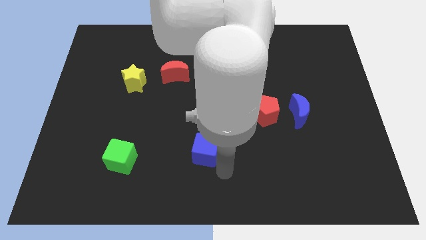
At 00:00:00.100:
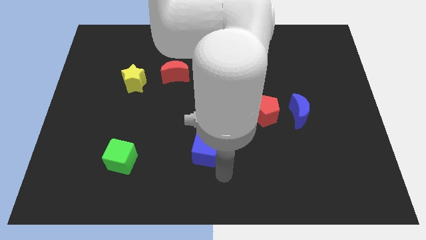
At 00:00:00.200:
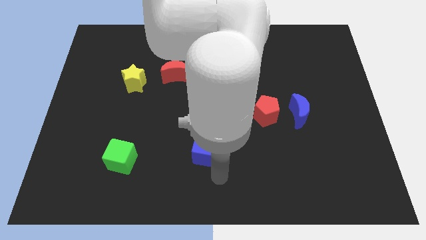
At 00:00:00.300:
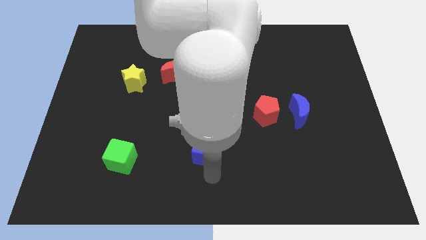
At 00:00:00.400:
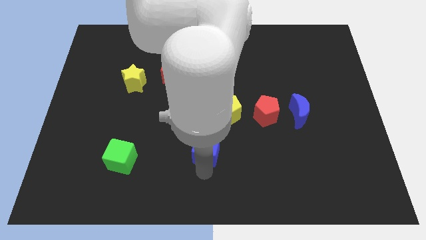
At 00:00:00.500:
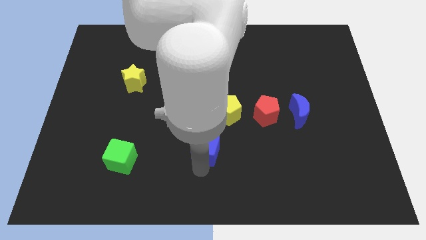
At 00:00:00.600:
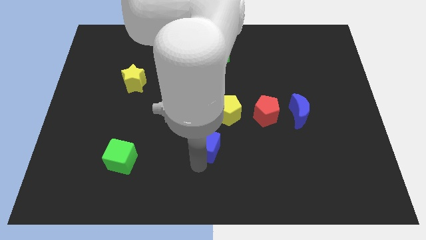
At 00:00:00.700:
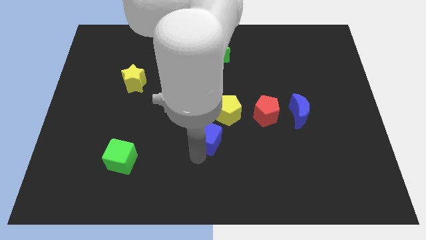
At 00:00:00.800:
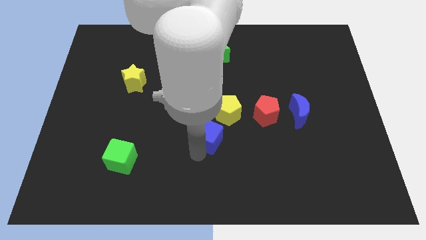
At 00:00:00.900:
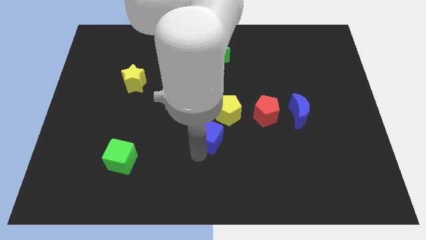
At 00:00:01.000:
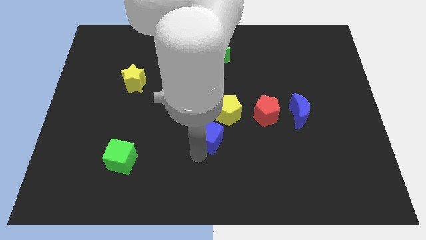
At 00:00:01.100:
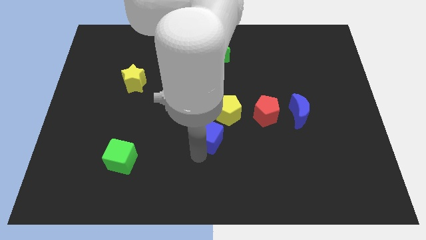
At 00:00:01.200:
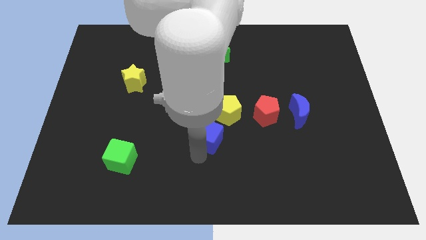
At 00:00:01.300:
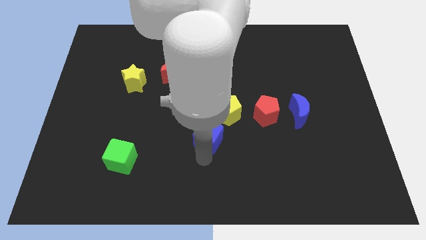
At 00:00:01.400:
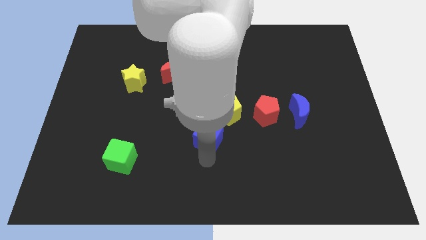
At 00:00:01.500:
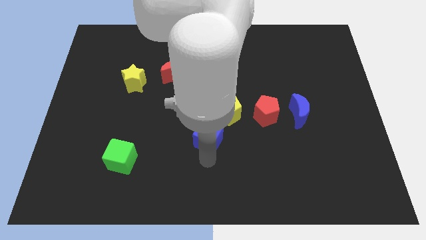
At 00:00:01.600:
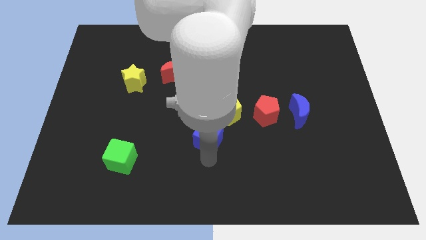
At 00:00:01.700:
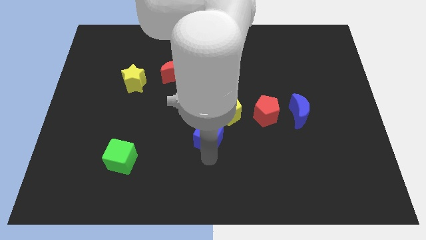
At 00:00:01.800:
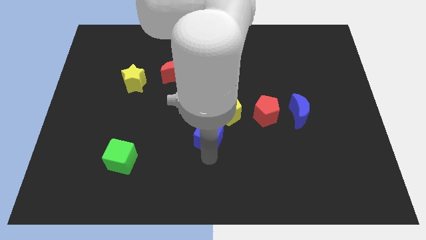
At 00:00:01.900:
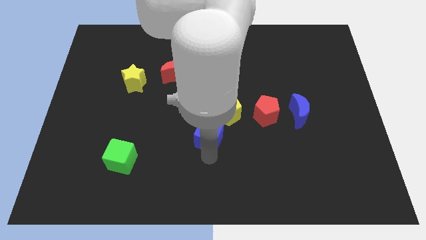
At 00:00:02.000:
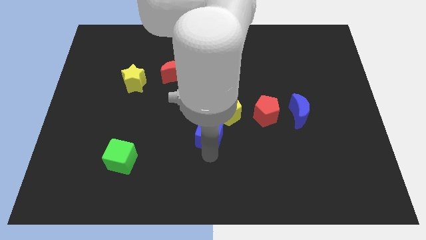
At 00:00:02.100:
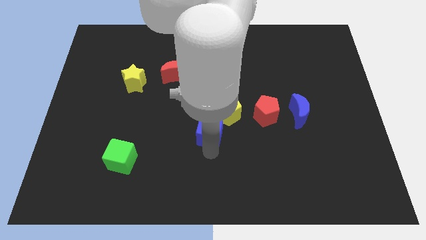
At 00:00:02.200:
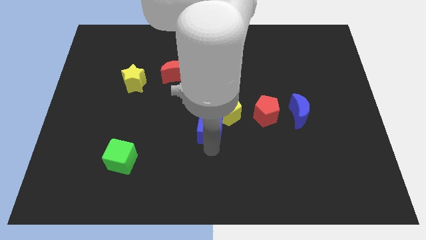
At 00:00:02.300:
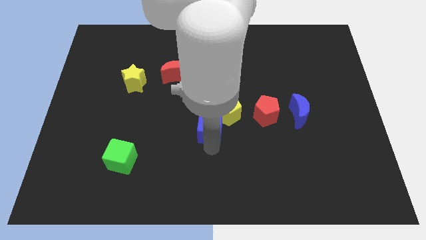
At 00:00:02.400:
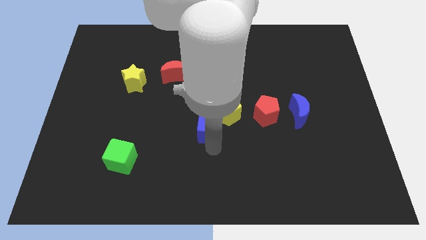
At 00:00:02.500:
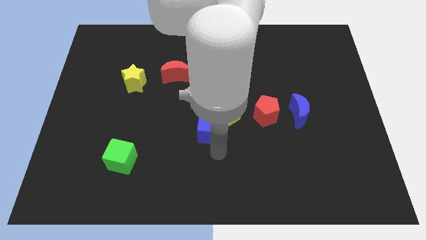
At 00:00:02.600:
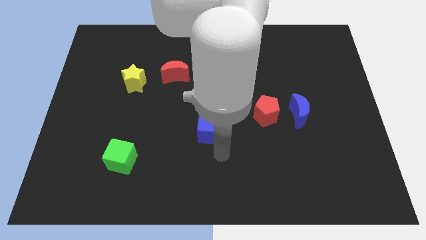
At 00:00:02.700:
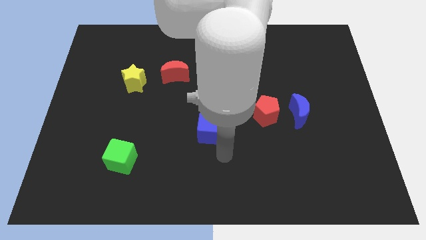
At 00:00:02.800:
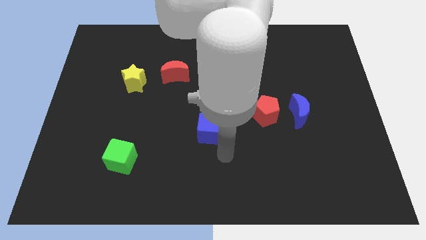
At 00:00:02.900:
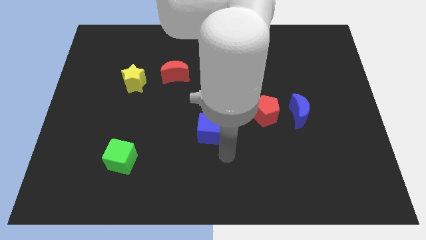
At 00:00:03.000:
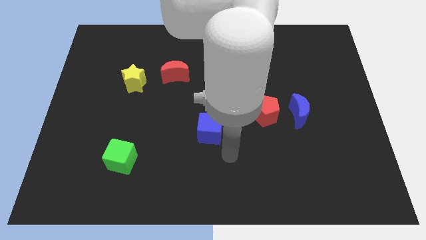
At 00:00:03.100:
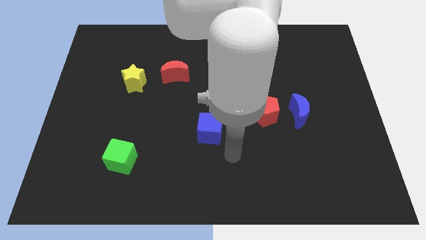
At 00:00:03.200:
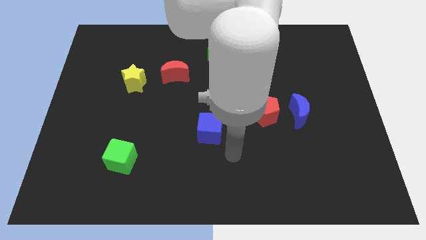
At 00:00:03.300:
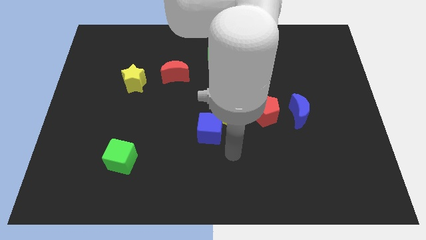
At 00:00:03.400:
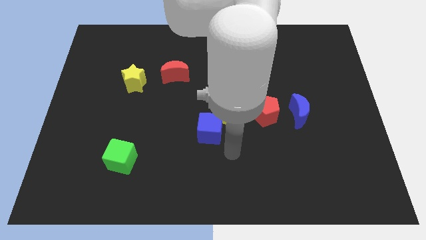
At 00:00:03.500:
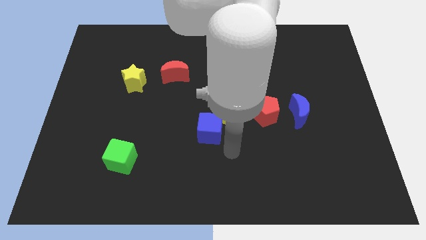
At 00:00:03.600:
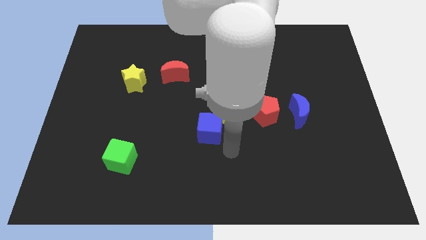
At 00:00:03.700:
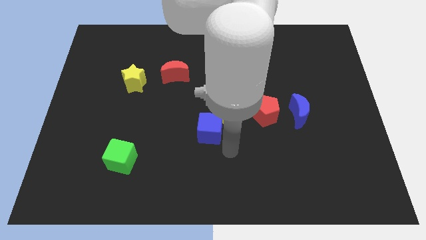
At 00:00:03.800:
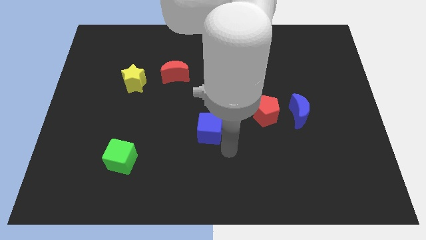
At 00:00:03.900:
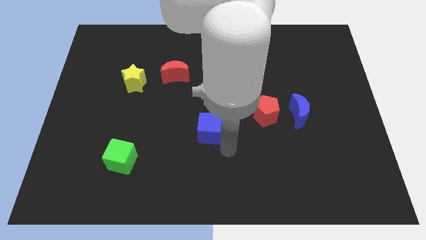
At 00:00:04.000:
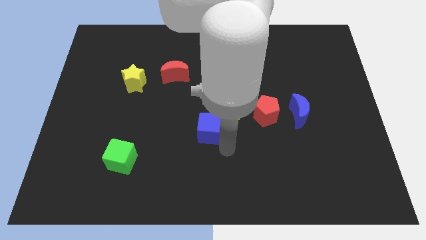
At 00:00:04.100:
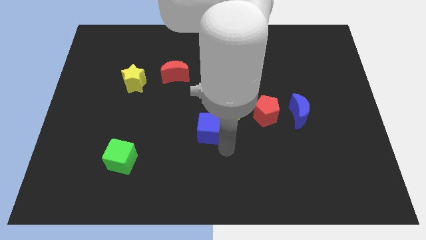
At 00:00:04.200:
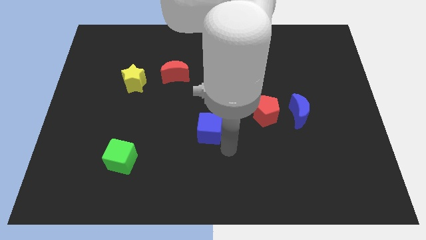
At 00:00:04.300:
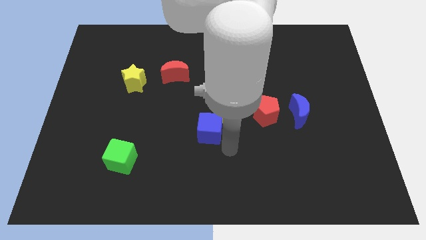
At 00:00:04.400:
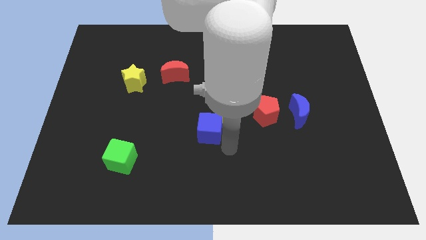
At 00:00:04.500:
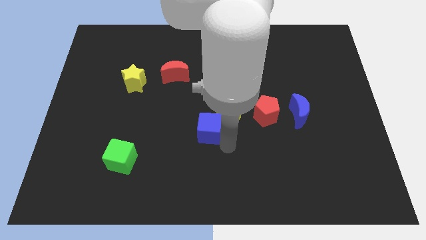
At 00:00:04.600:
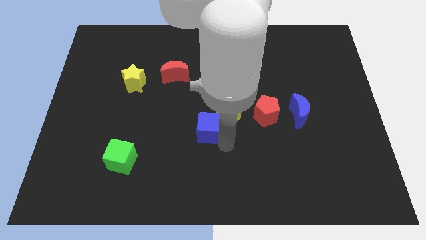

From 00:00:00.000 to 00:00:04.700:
move the blue cube towards the center

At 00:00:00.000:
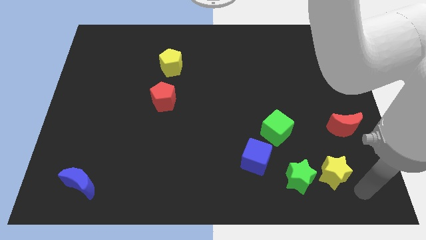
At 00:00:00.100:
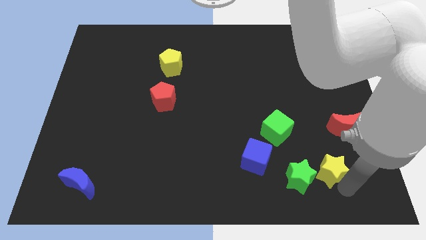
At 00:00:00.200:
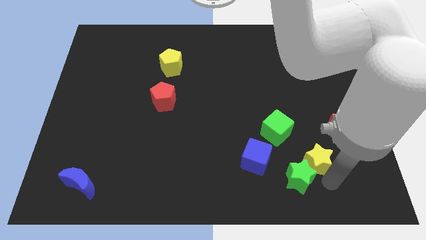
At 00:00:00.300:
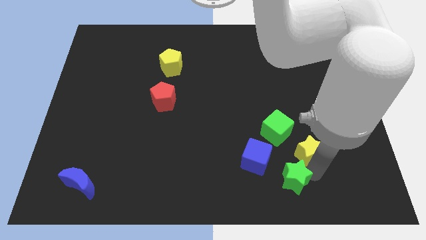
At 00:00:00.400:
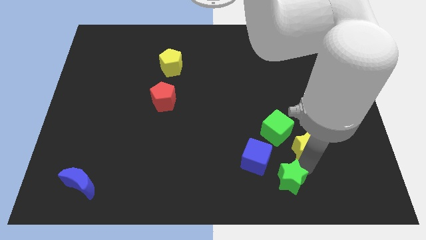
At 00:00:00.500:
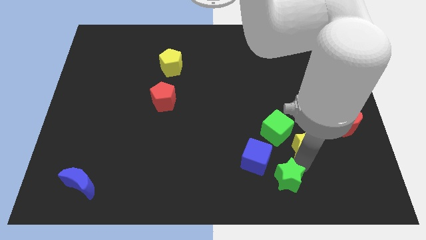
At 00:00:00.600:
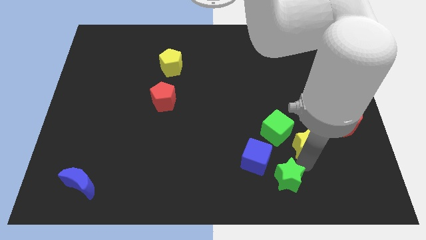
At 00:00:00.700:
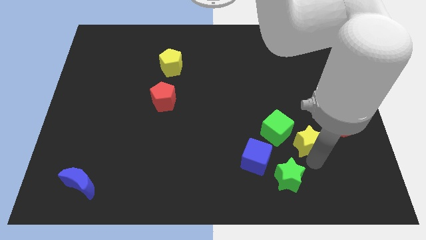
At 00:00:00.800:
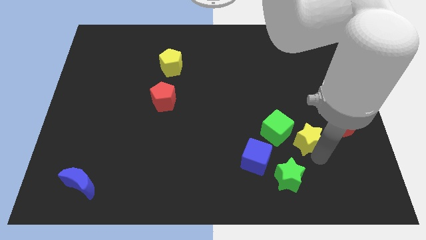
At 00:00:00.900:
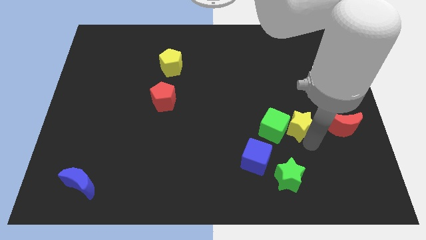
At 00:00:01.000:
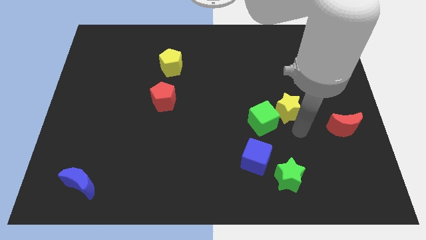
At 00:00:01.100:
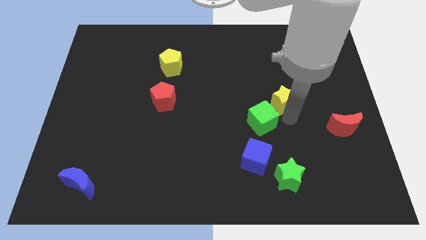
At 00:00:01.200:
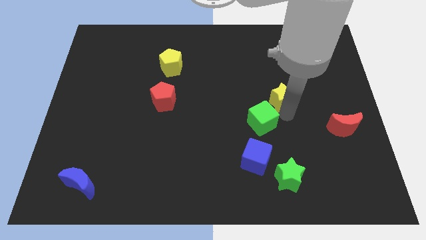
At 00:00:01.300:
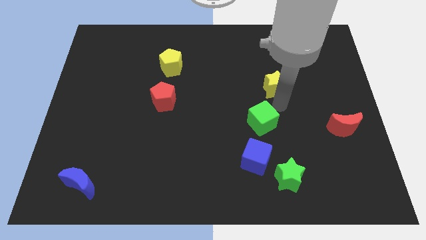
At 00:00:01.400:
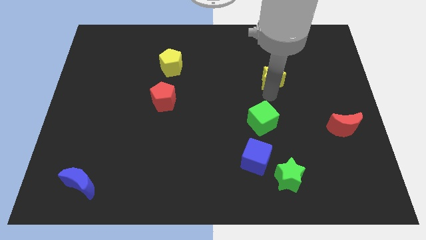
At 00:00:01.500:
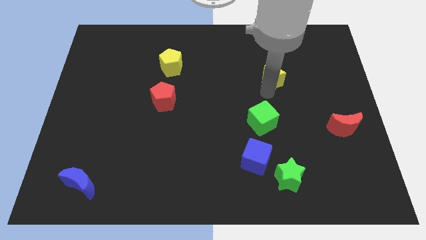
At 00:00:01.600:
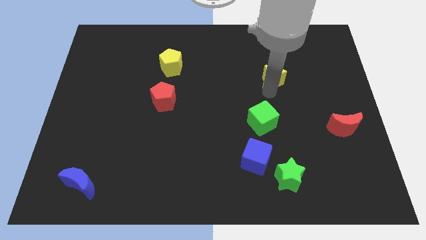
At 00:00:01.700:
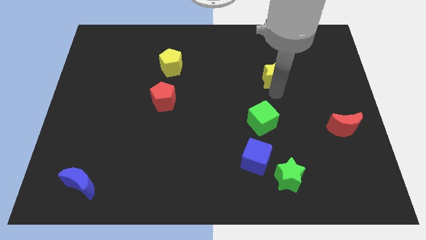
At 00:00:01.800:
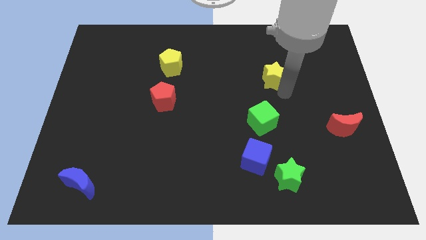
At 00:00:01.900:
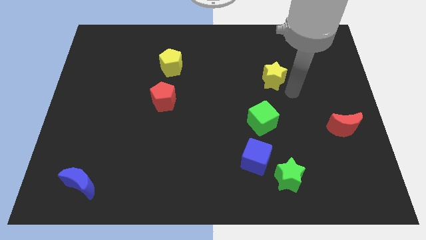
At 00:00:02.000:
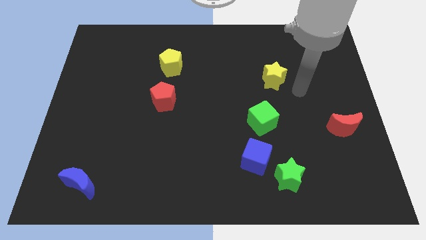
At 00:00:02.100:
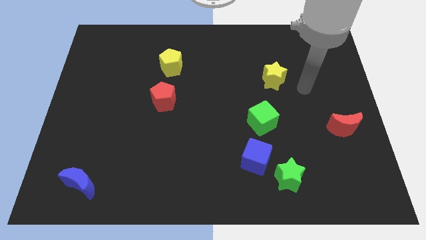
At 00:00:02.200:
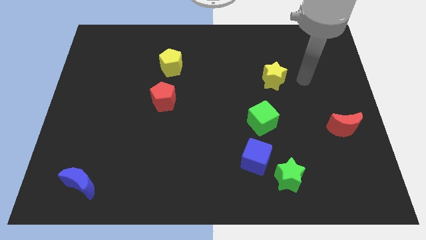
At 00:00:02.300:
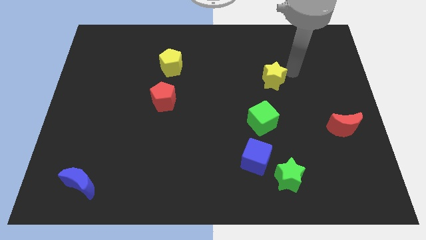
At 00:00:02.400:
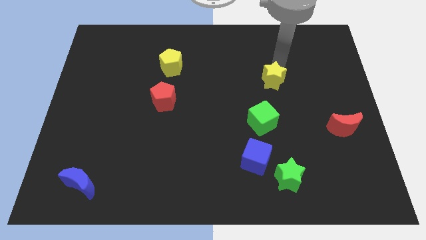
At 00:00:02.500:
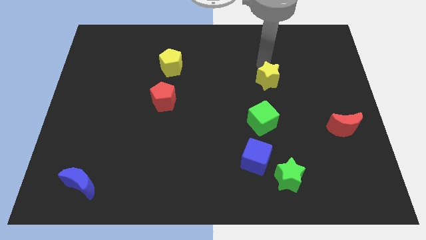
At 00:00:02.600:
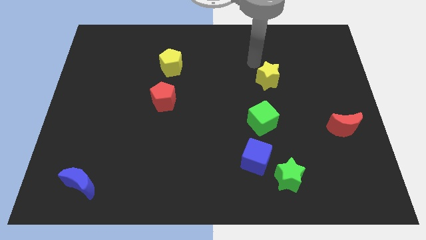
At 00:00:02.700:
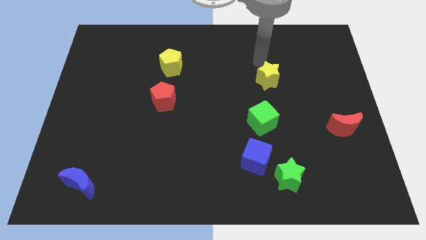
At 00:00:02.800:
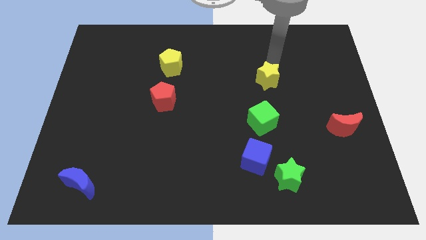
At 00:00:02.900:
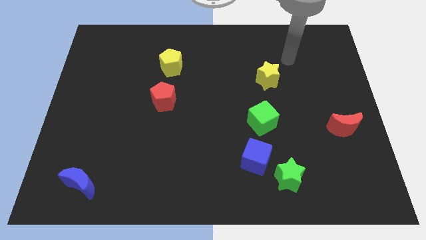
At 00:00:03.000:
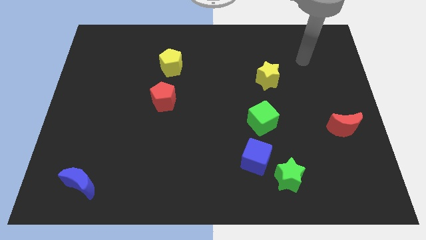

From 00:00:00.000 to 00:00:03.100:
move the yellow star vertically above the green cube

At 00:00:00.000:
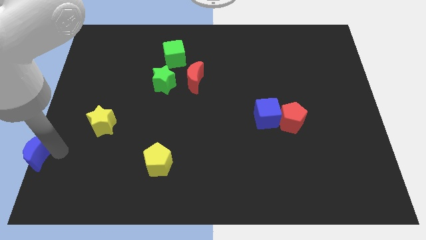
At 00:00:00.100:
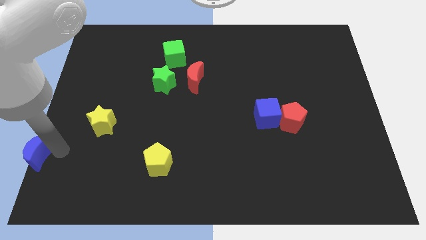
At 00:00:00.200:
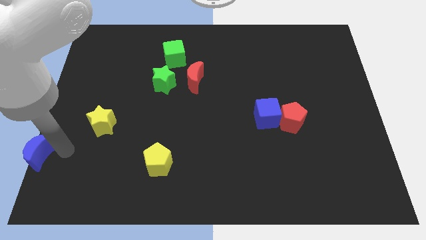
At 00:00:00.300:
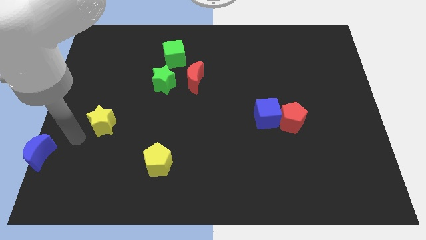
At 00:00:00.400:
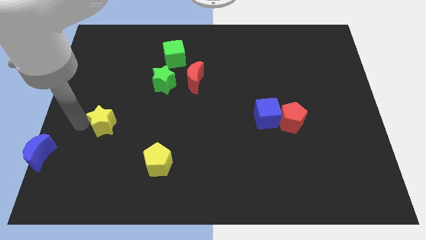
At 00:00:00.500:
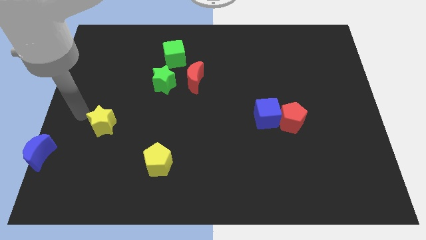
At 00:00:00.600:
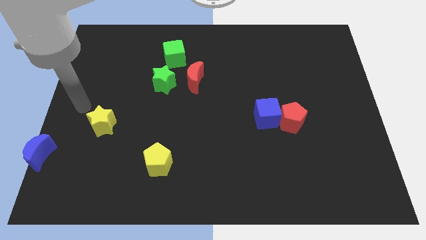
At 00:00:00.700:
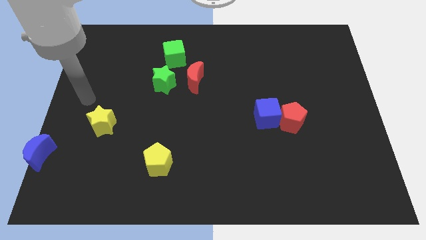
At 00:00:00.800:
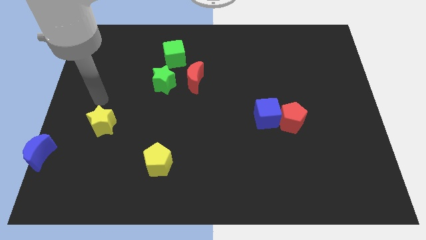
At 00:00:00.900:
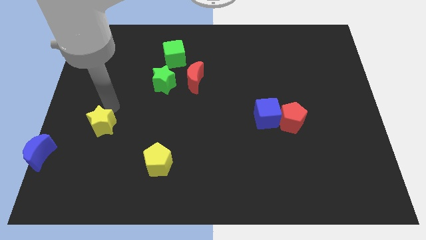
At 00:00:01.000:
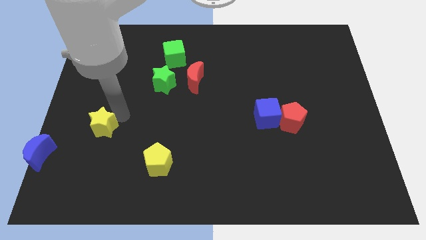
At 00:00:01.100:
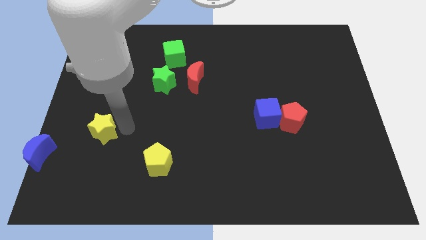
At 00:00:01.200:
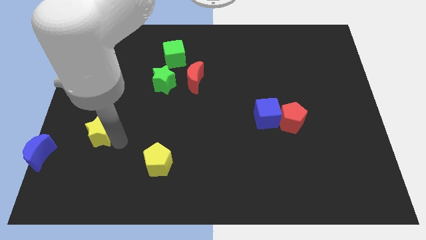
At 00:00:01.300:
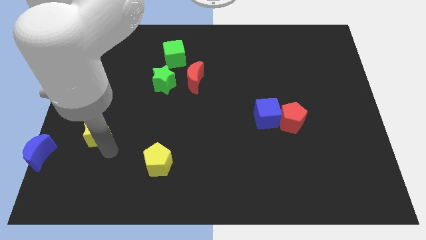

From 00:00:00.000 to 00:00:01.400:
move yellow star slightly down
